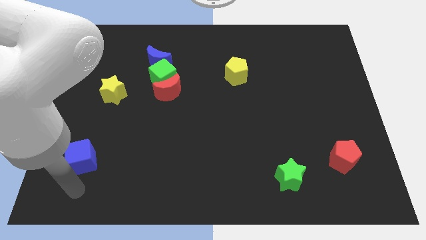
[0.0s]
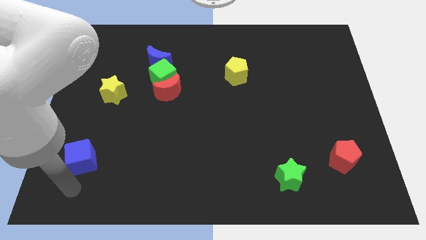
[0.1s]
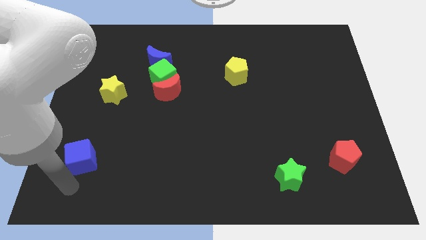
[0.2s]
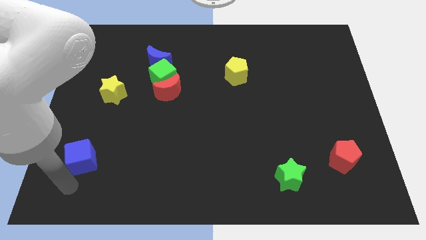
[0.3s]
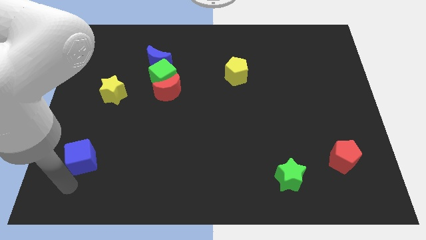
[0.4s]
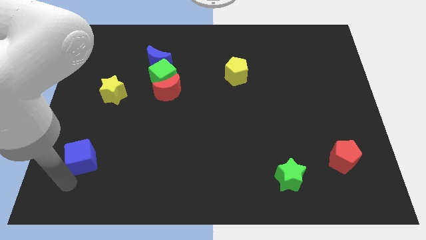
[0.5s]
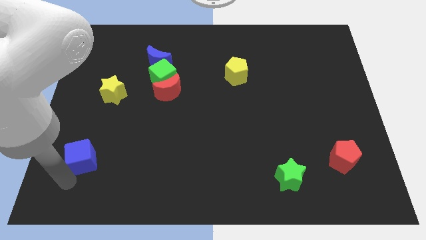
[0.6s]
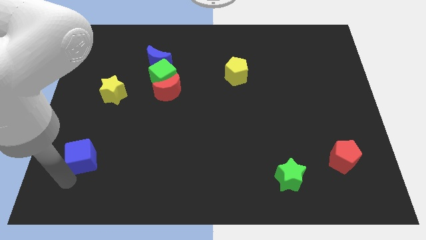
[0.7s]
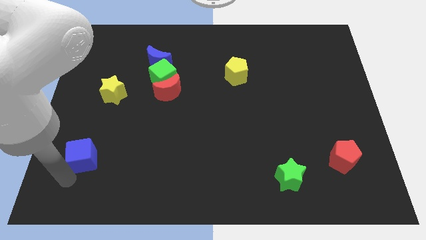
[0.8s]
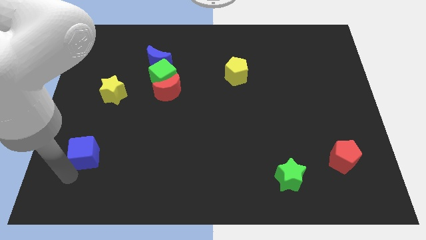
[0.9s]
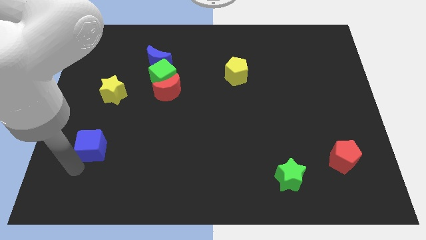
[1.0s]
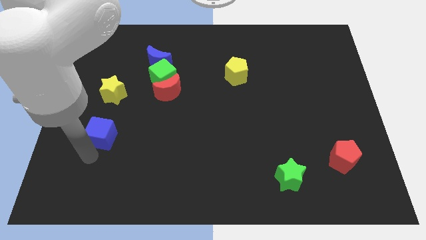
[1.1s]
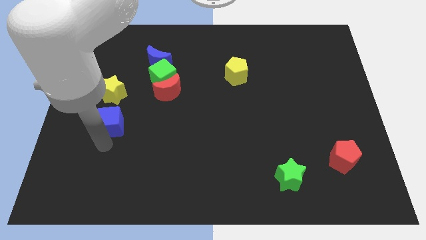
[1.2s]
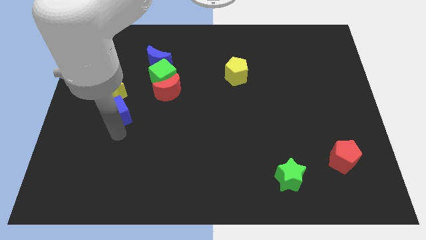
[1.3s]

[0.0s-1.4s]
push the blue cube close to the yellow star

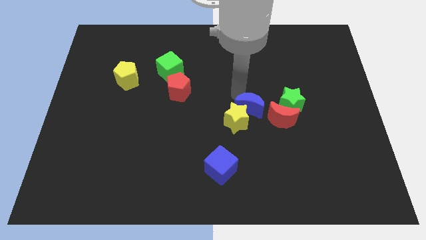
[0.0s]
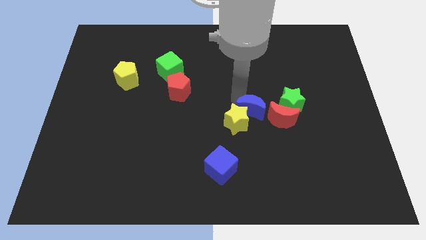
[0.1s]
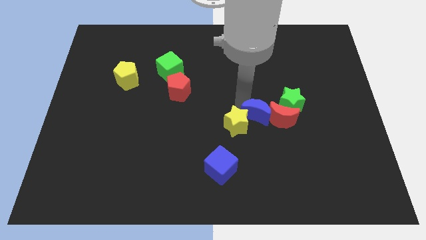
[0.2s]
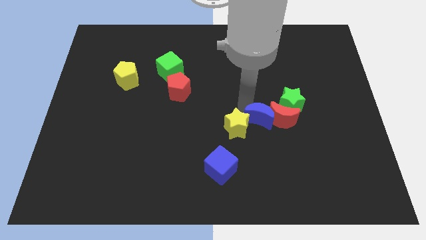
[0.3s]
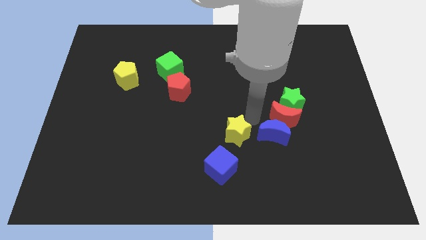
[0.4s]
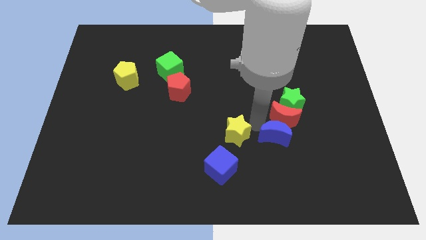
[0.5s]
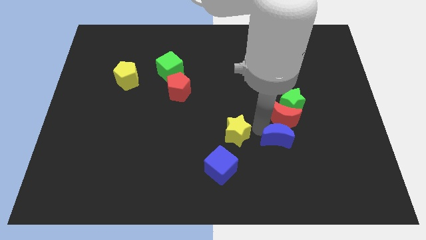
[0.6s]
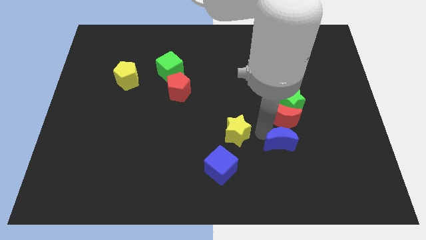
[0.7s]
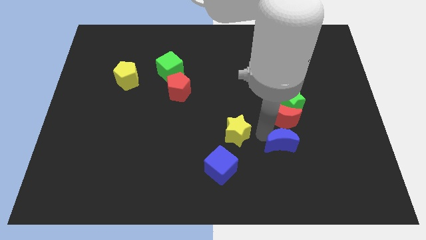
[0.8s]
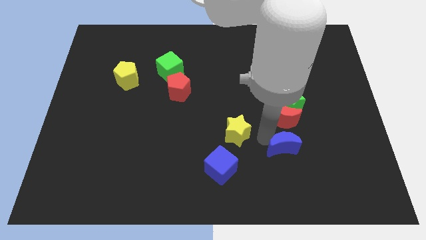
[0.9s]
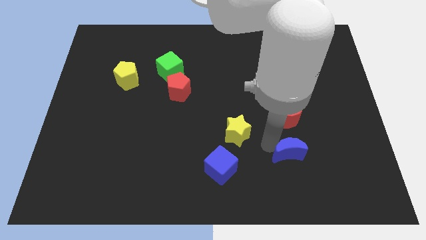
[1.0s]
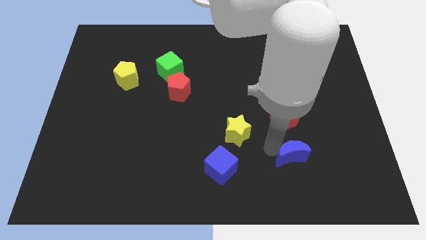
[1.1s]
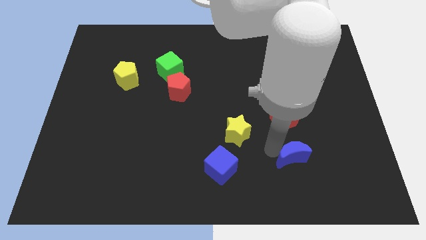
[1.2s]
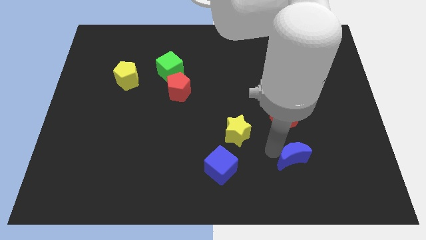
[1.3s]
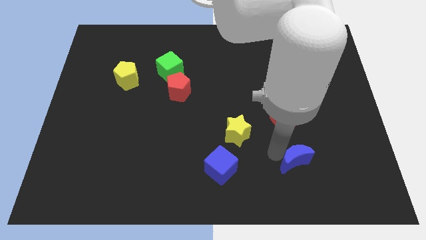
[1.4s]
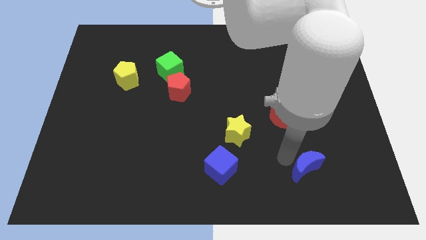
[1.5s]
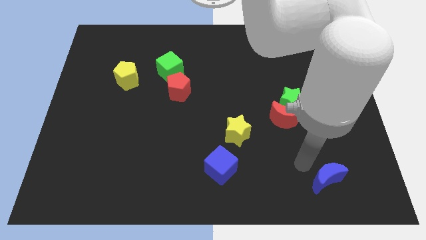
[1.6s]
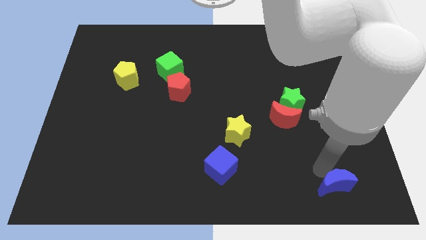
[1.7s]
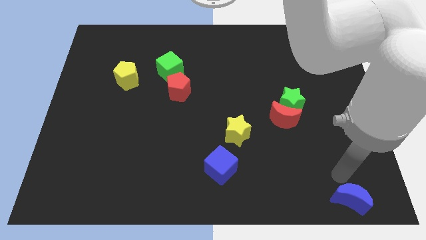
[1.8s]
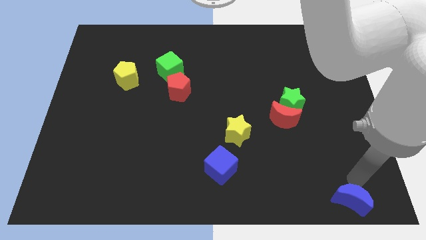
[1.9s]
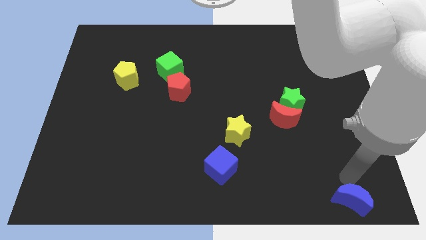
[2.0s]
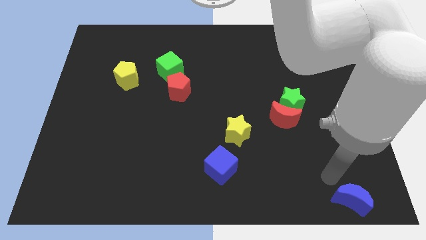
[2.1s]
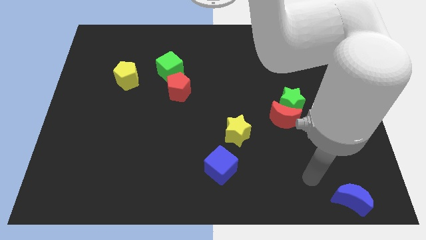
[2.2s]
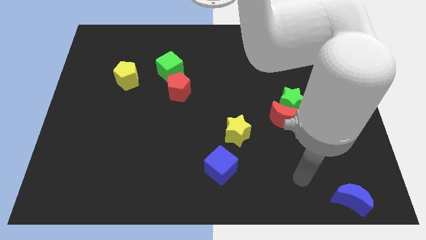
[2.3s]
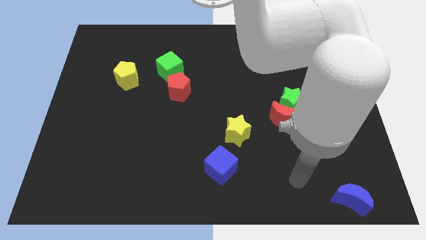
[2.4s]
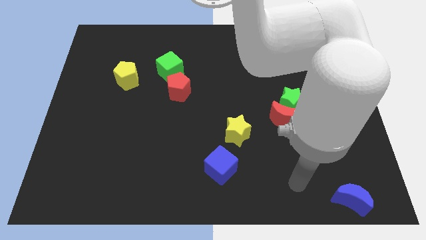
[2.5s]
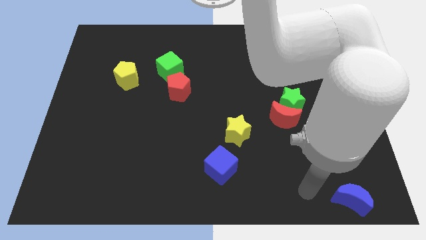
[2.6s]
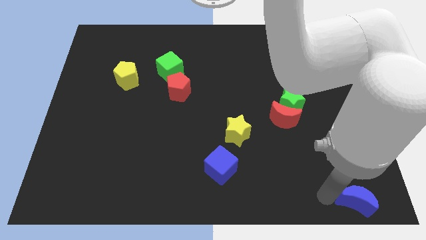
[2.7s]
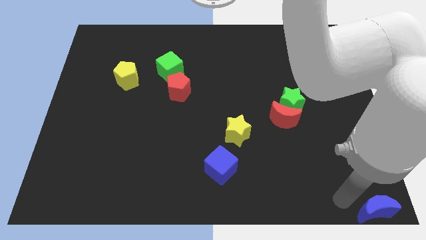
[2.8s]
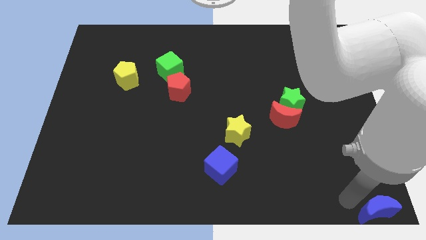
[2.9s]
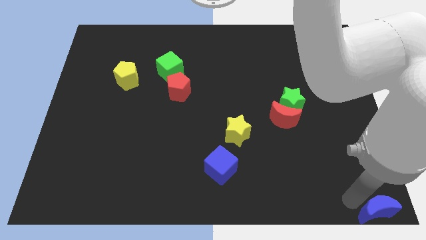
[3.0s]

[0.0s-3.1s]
push blue crescent towards the bottom right corner of the board

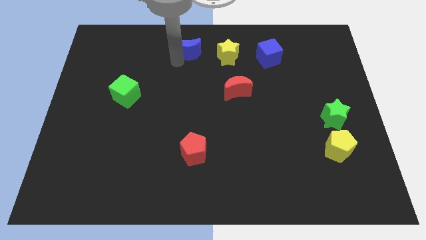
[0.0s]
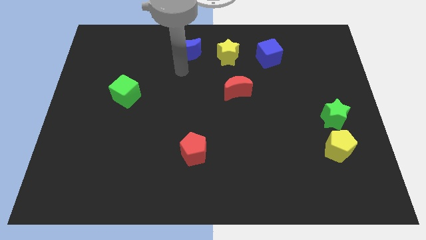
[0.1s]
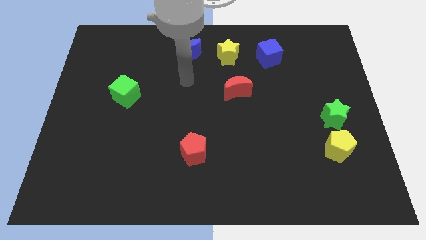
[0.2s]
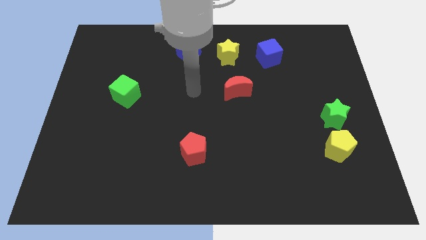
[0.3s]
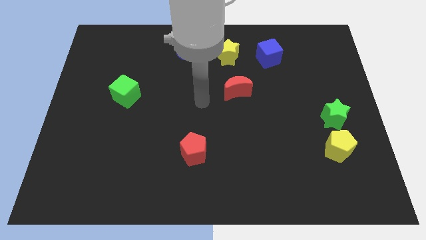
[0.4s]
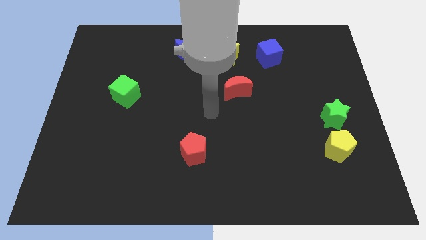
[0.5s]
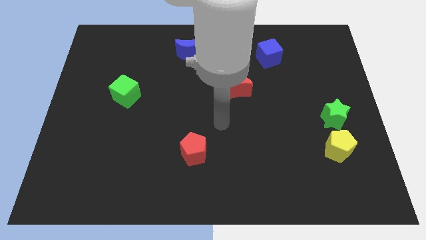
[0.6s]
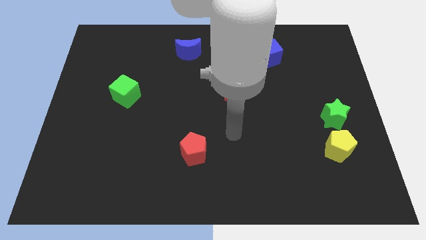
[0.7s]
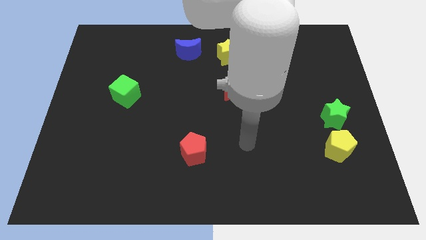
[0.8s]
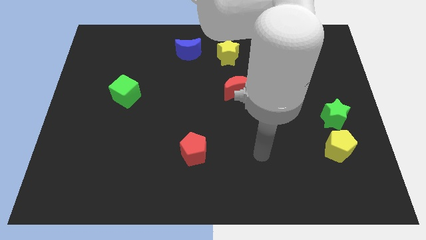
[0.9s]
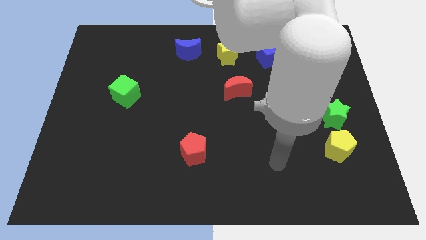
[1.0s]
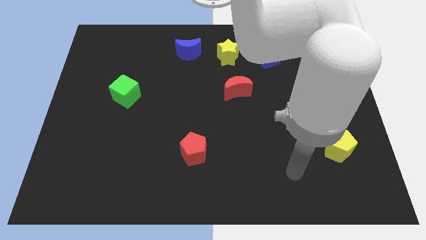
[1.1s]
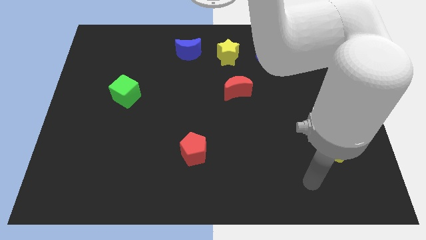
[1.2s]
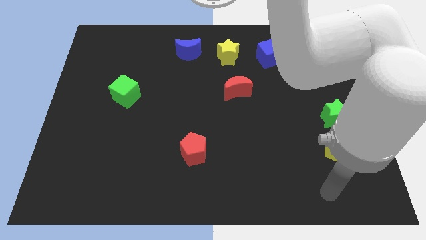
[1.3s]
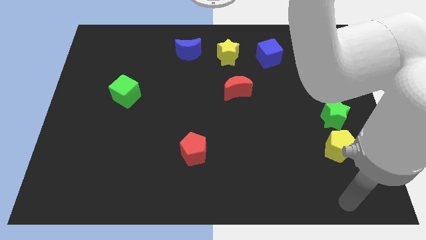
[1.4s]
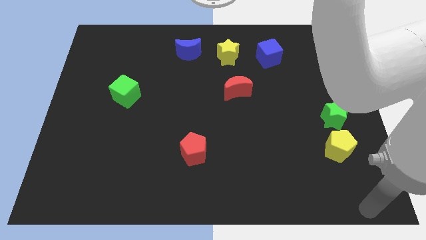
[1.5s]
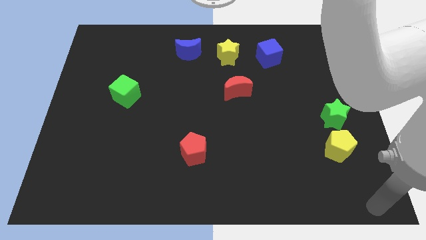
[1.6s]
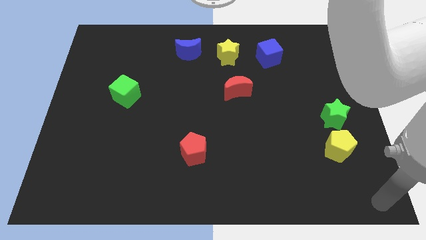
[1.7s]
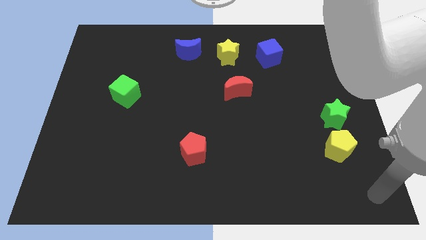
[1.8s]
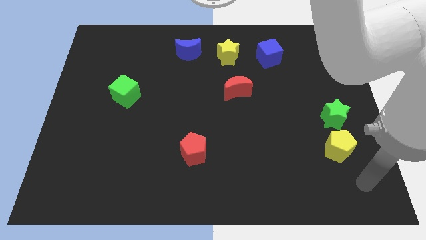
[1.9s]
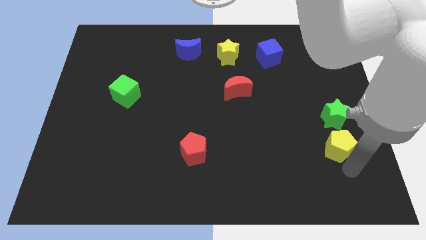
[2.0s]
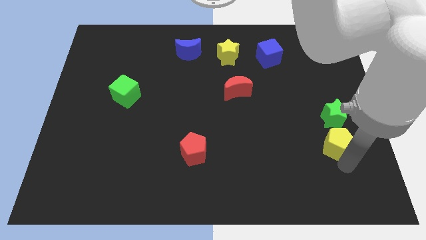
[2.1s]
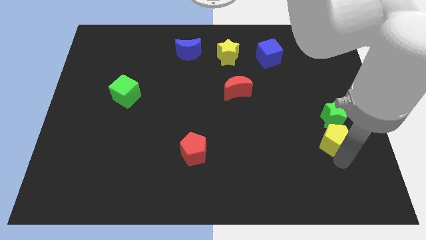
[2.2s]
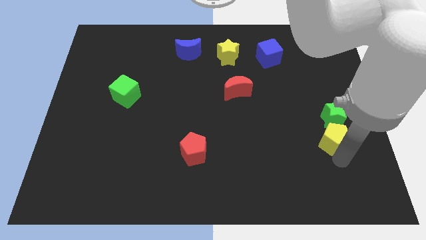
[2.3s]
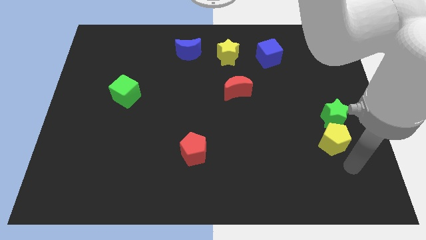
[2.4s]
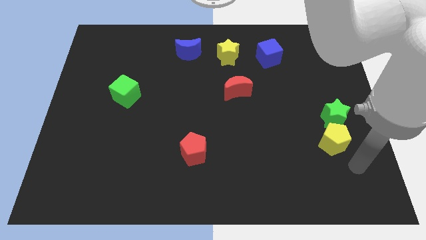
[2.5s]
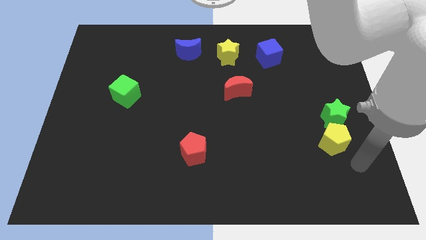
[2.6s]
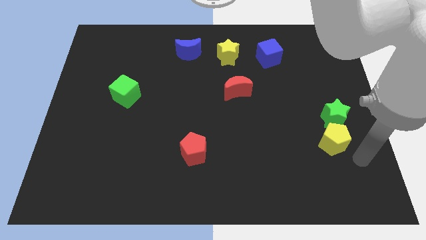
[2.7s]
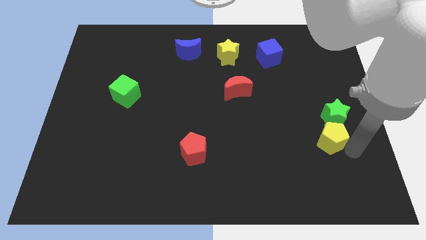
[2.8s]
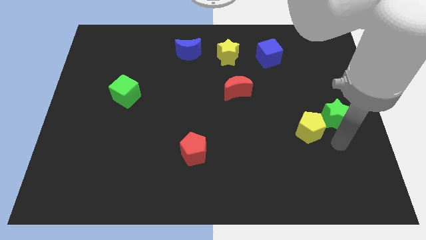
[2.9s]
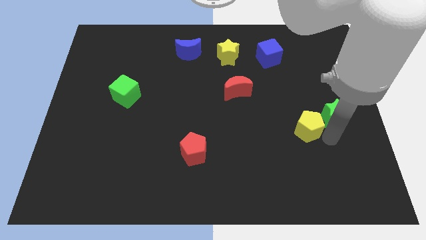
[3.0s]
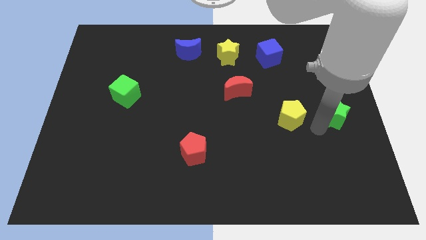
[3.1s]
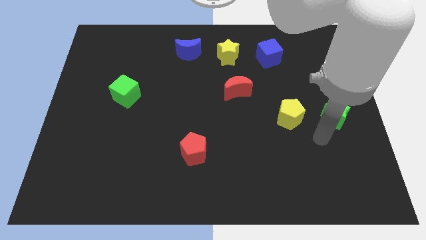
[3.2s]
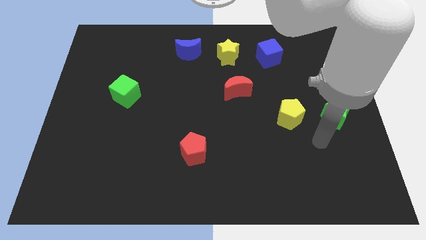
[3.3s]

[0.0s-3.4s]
move the yellow pentagon towards the red crescent

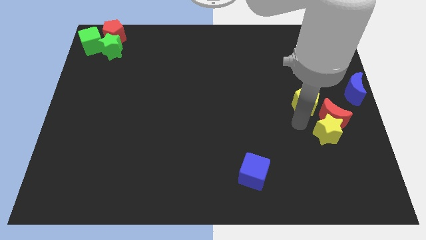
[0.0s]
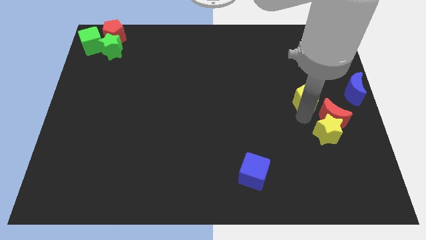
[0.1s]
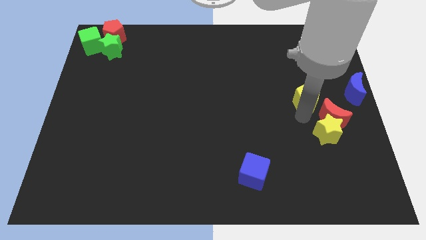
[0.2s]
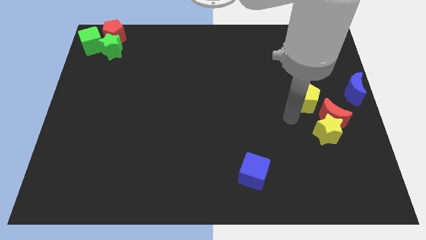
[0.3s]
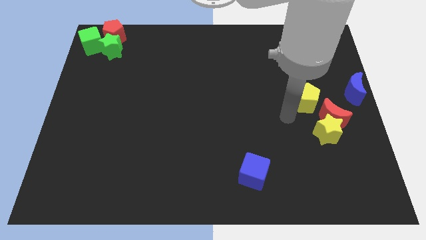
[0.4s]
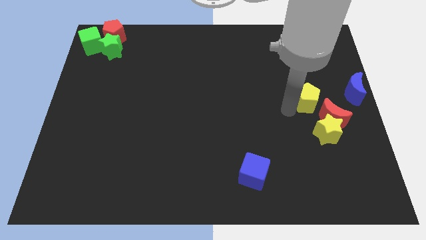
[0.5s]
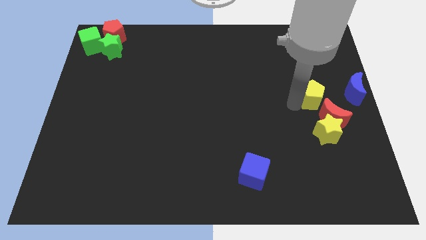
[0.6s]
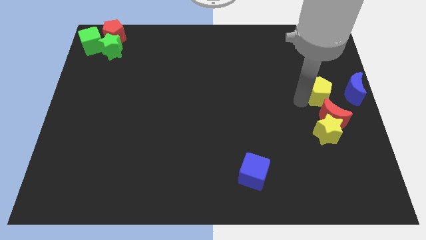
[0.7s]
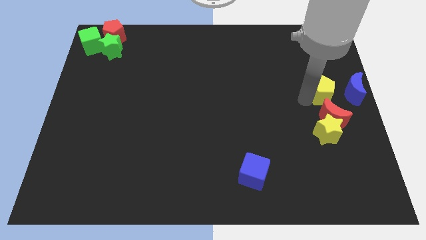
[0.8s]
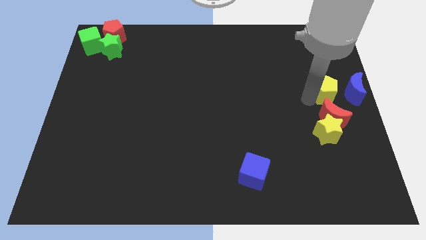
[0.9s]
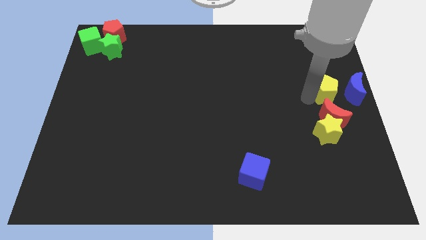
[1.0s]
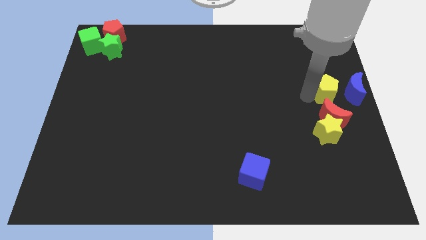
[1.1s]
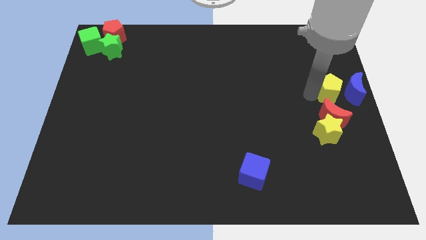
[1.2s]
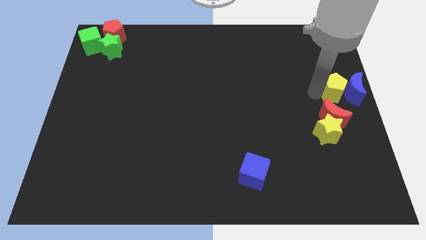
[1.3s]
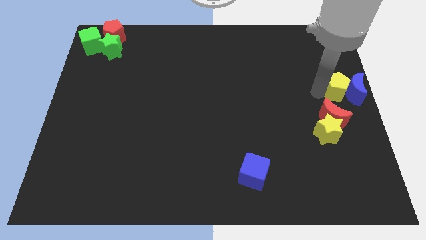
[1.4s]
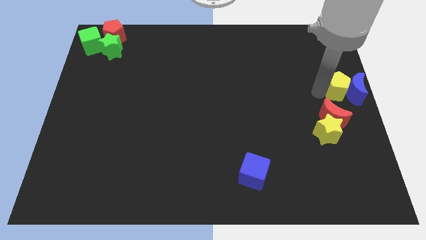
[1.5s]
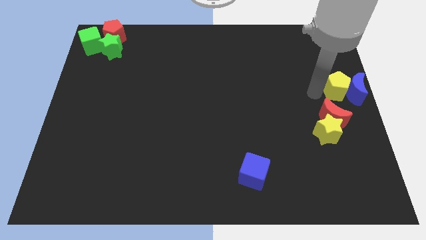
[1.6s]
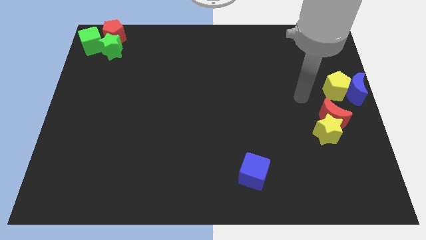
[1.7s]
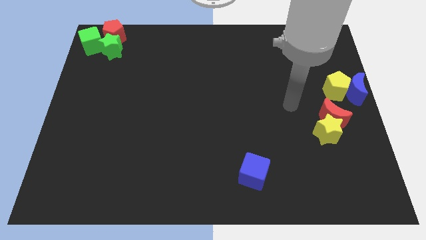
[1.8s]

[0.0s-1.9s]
place yellow polygon left of blue crescent
